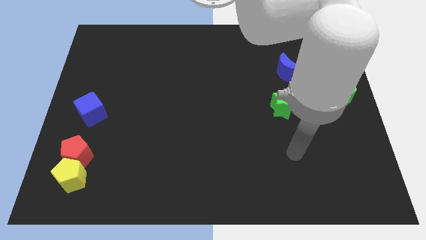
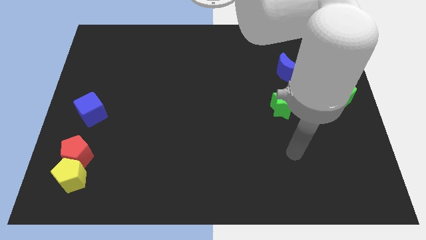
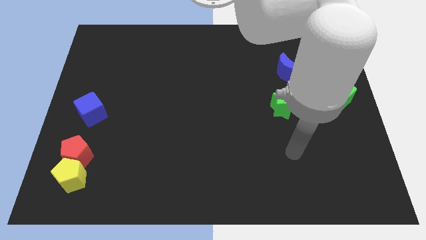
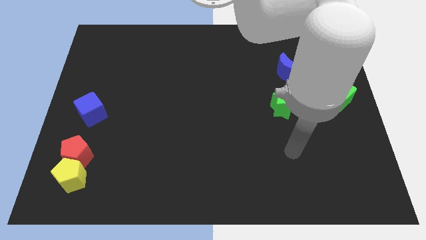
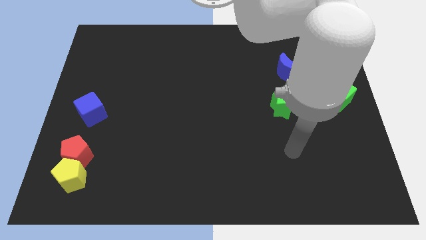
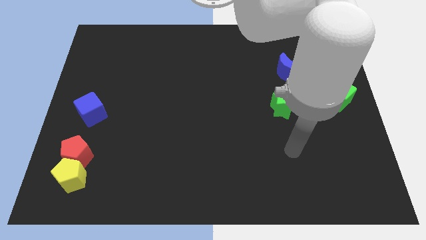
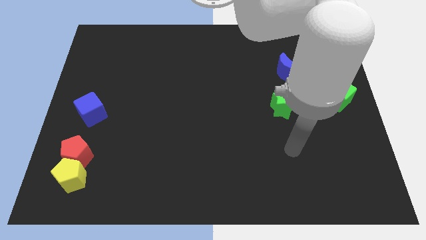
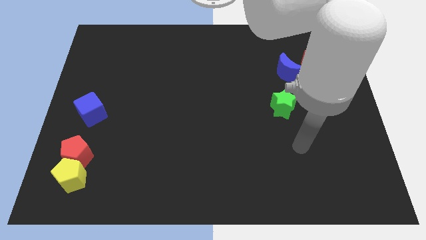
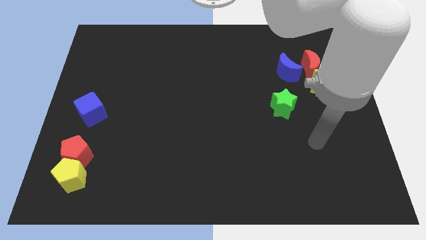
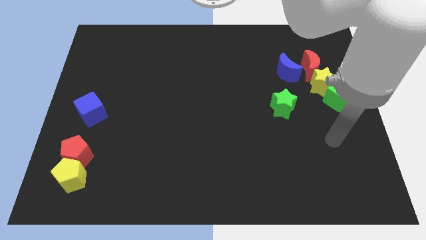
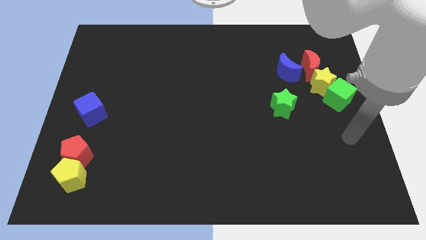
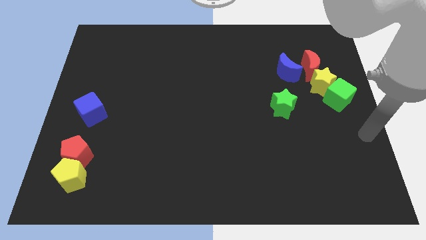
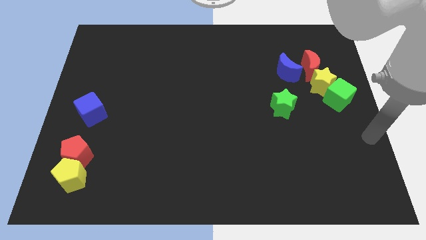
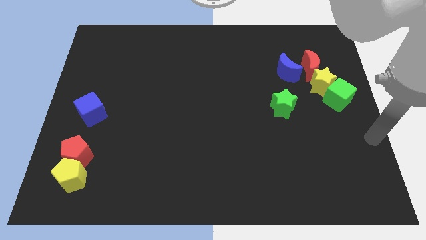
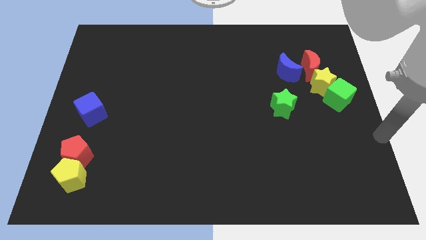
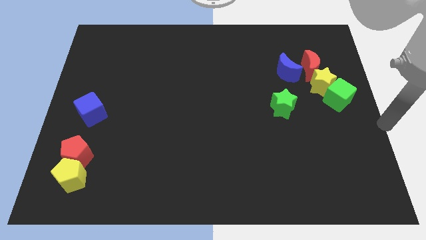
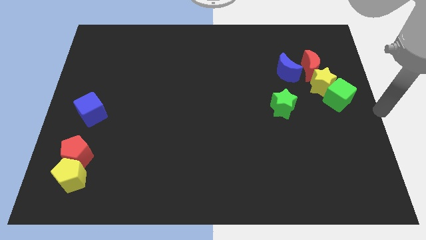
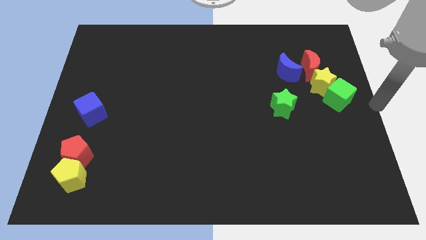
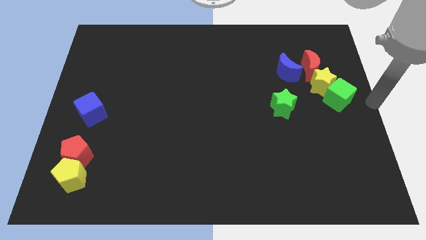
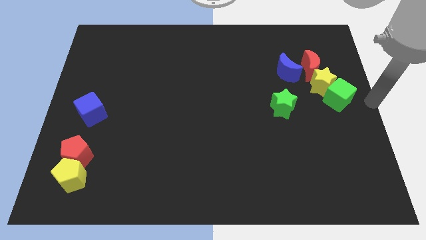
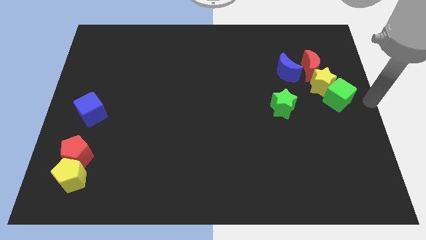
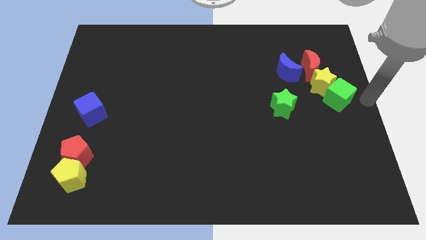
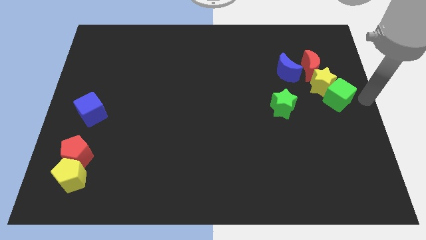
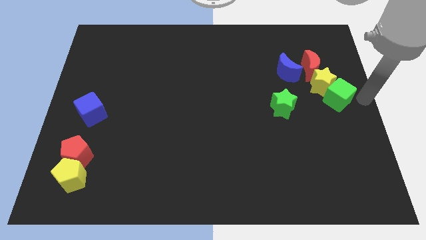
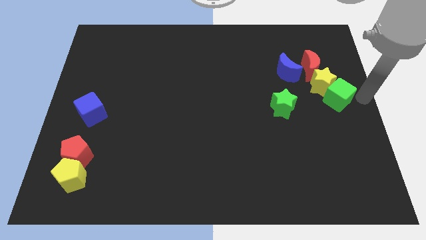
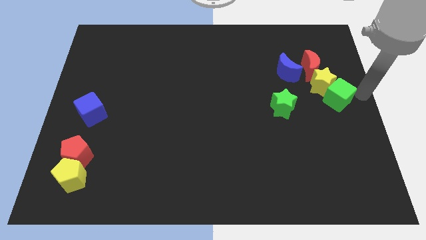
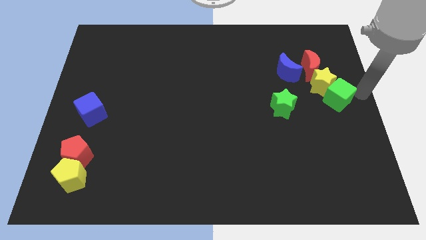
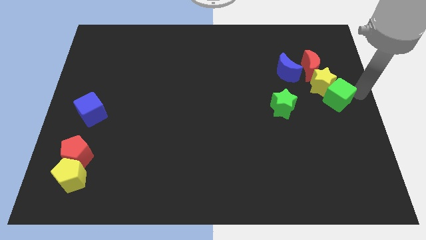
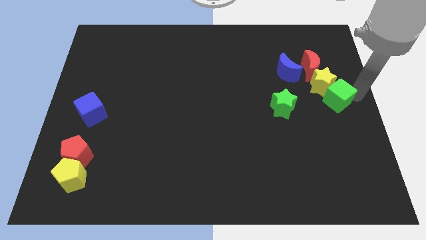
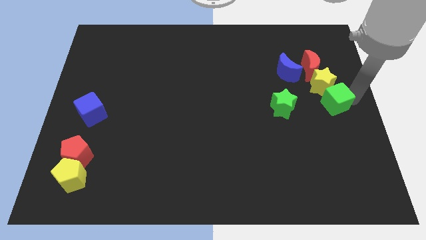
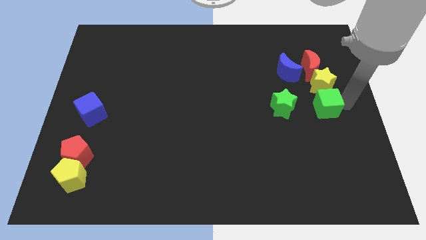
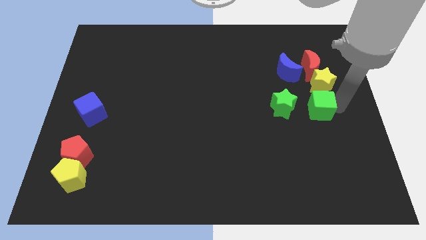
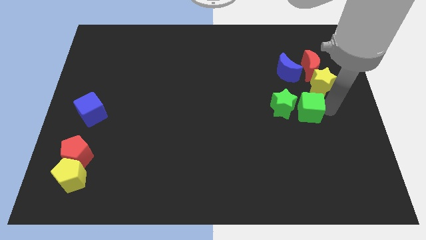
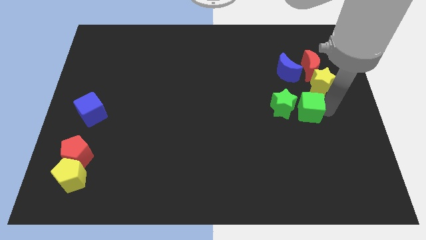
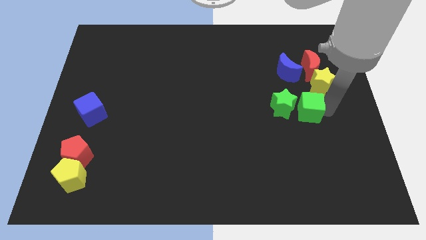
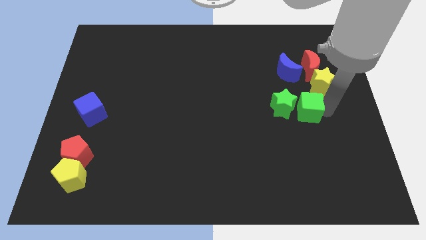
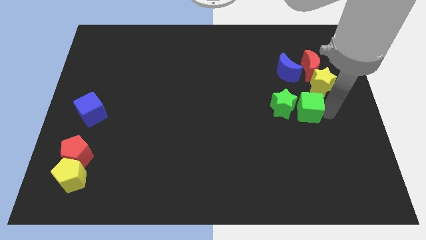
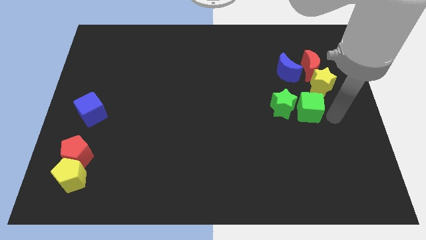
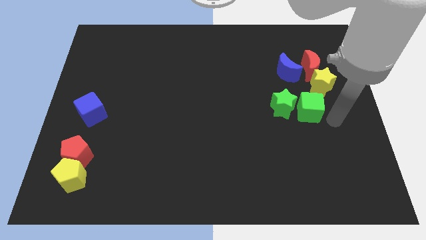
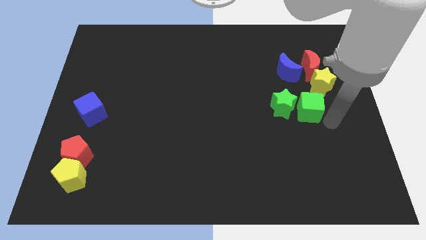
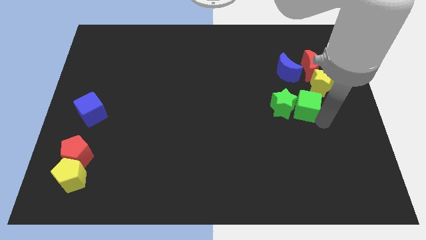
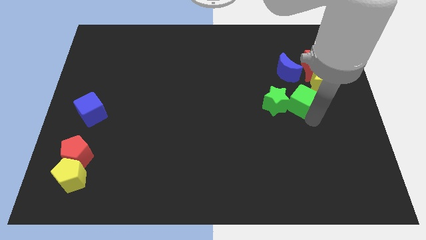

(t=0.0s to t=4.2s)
move the green cube to the right side of the green star

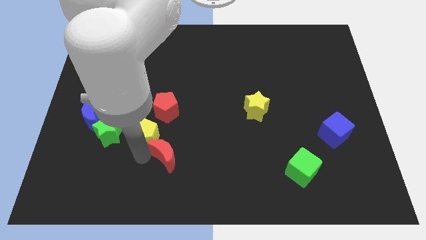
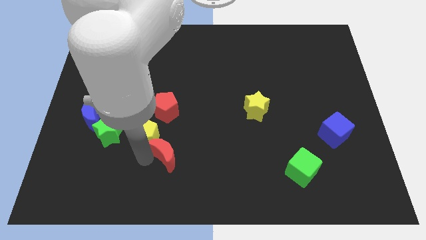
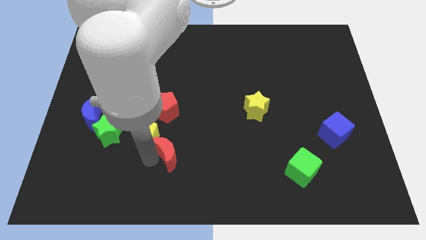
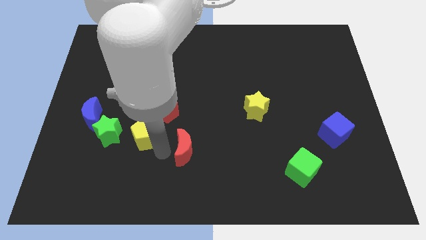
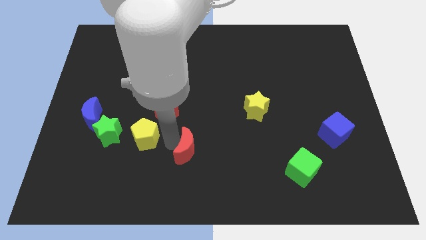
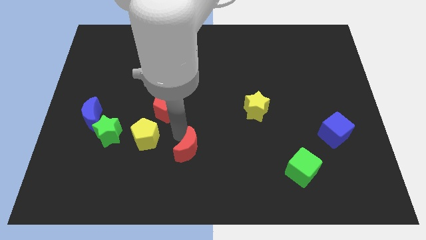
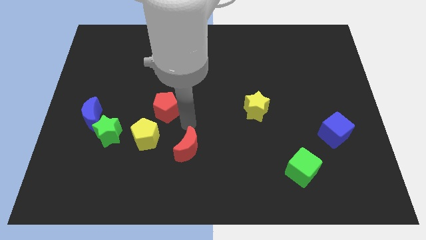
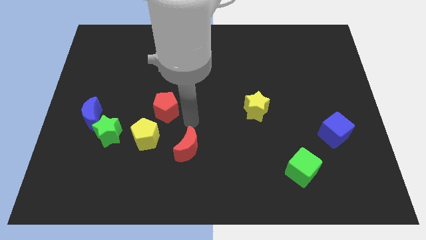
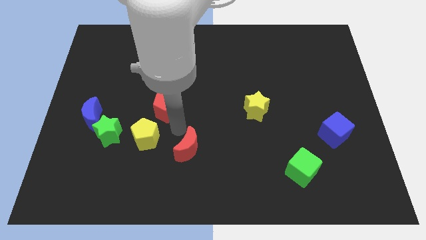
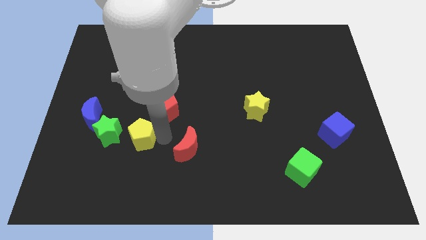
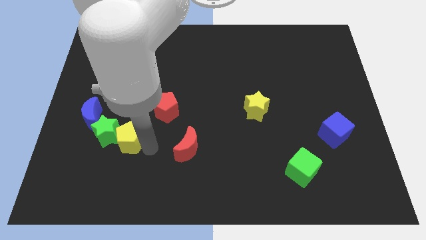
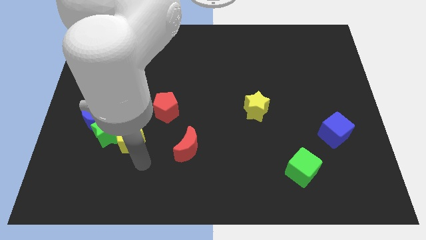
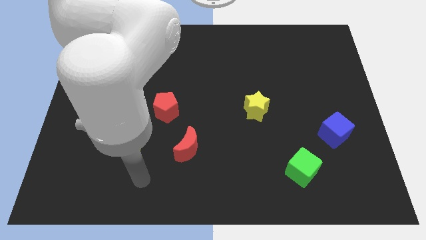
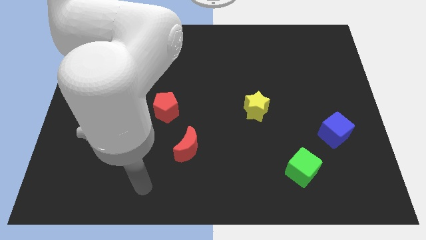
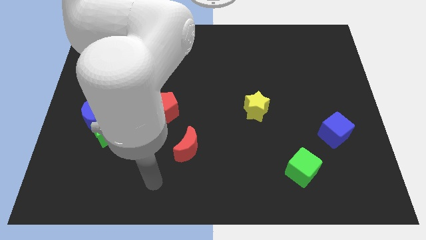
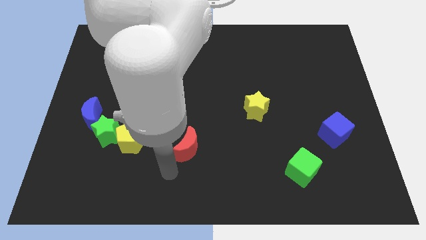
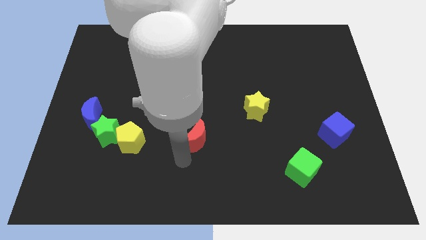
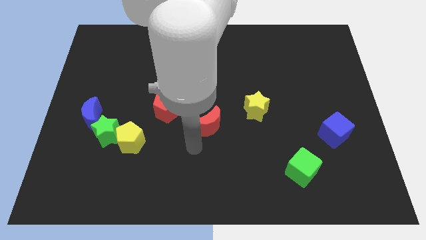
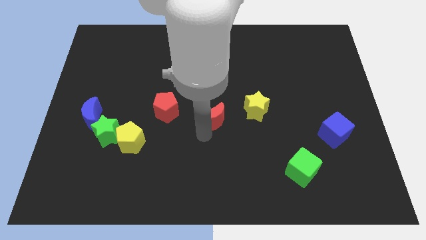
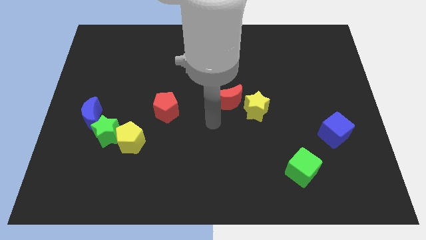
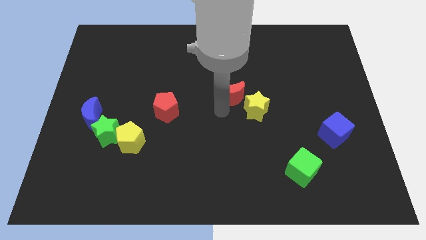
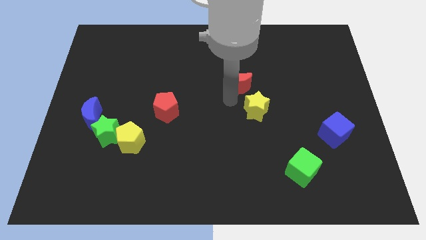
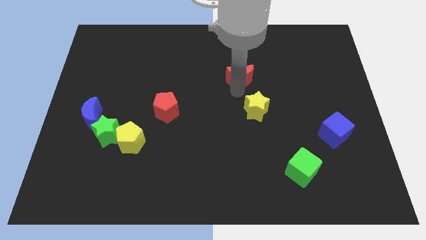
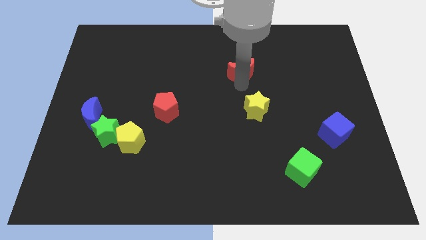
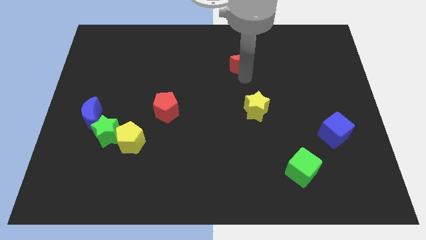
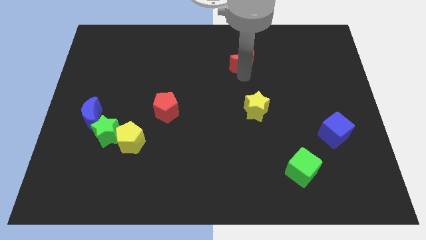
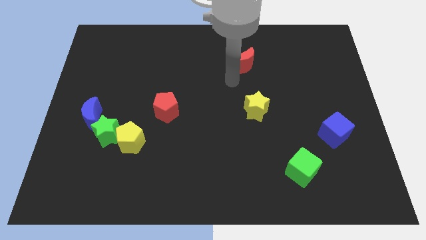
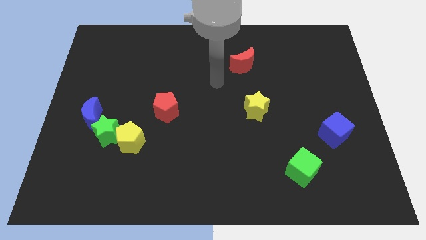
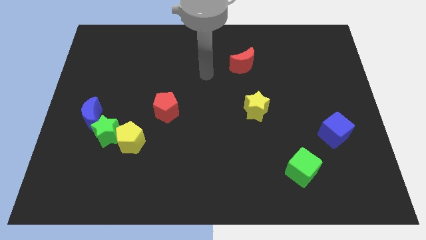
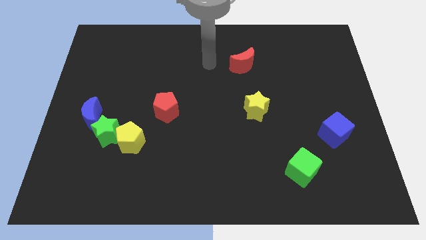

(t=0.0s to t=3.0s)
separate the red moon above the yellow pentagon

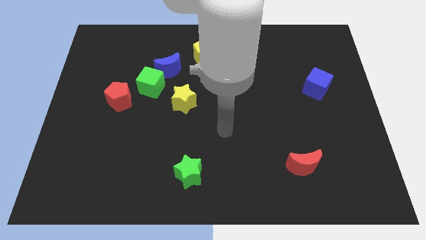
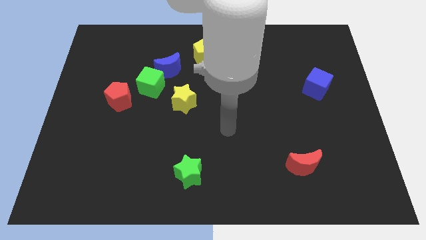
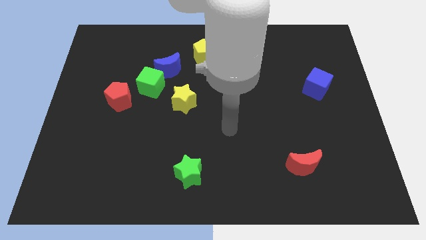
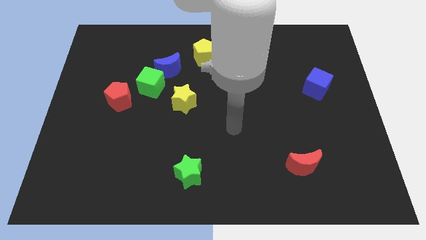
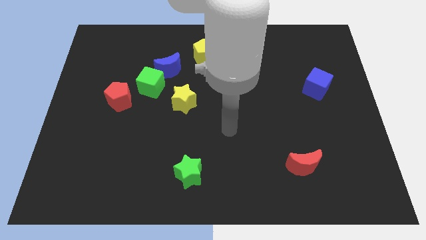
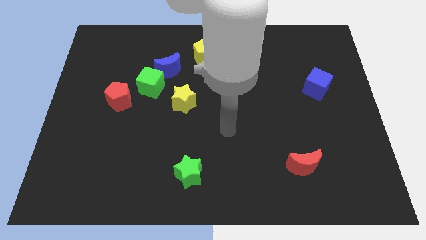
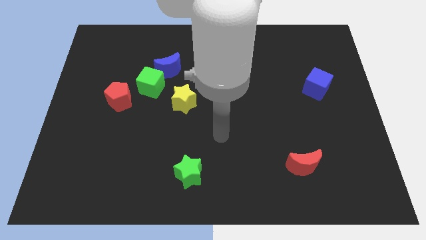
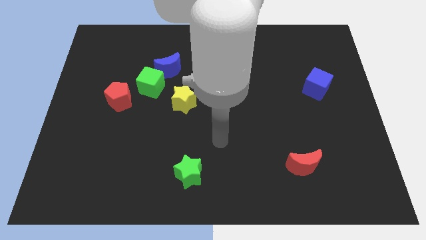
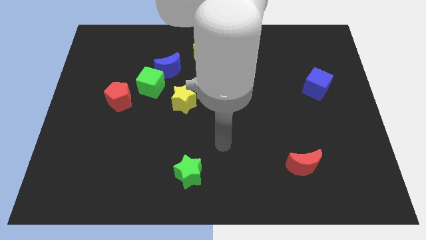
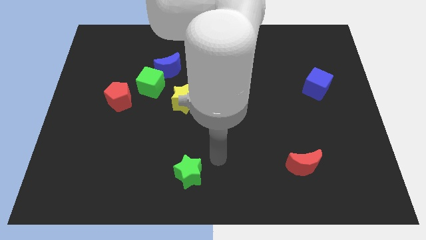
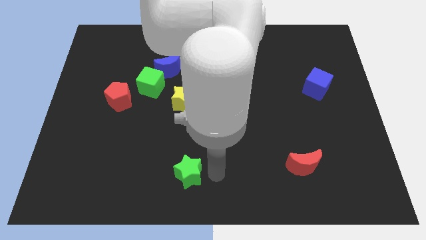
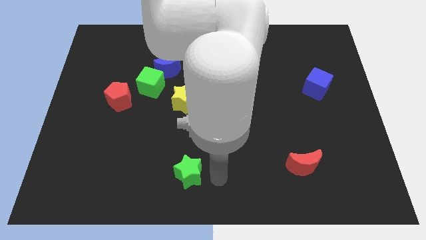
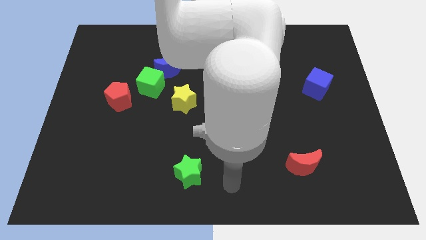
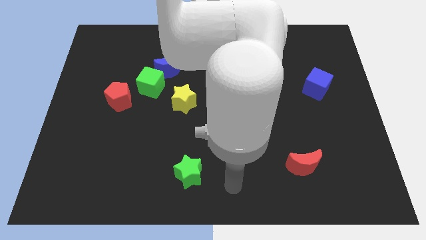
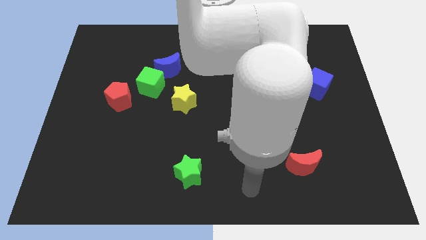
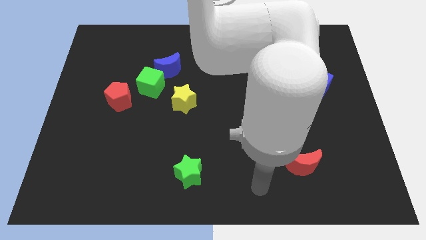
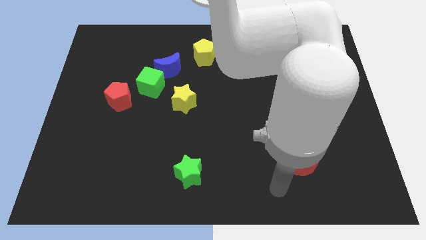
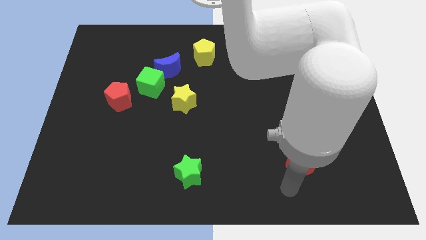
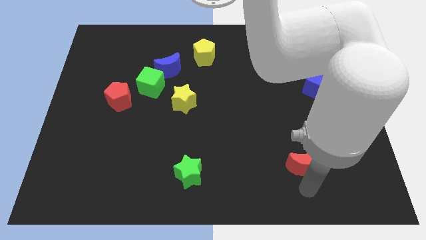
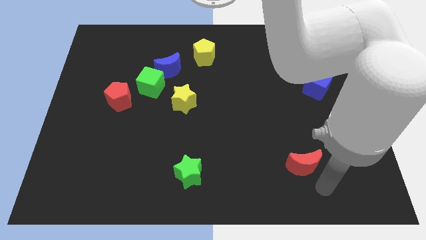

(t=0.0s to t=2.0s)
point your arm at the bottom of red moon
